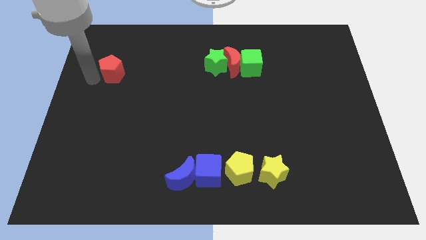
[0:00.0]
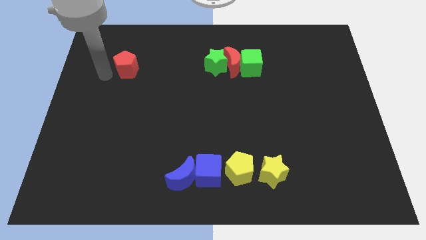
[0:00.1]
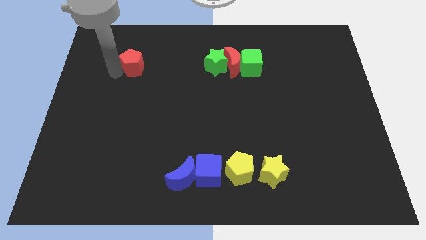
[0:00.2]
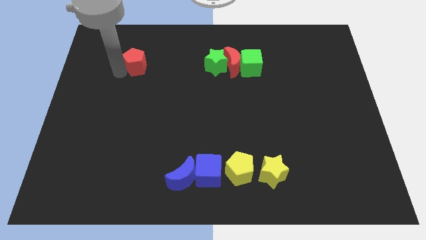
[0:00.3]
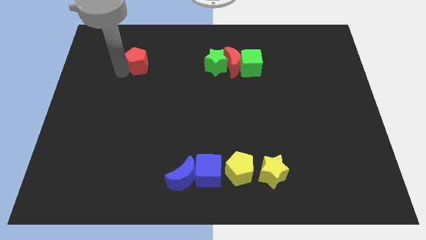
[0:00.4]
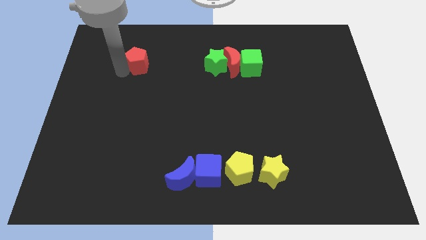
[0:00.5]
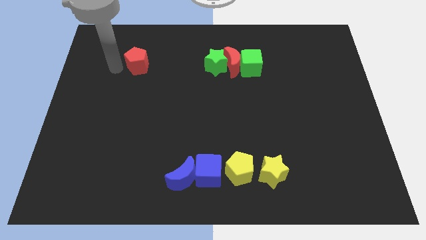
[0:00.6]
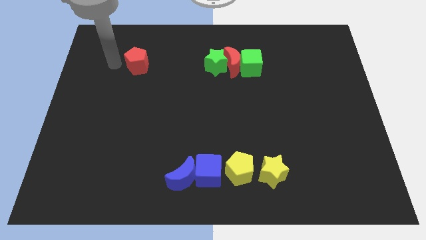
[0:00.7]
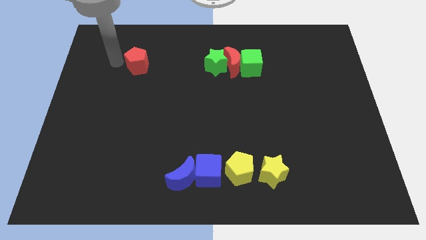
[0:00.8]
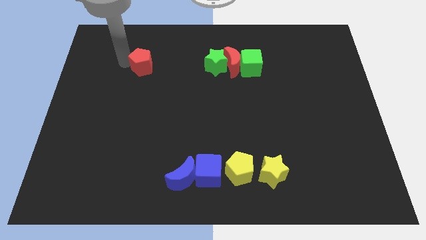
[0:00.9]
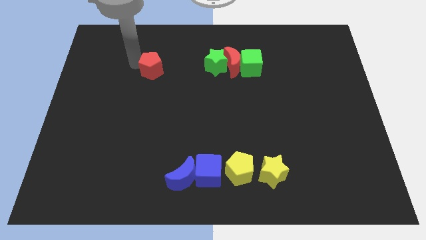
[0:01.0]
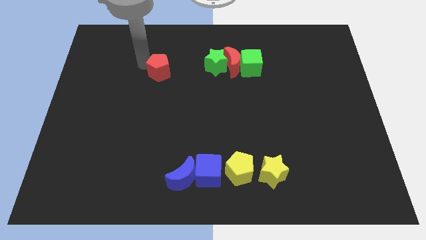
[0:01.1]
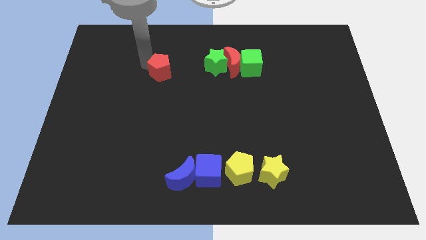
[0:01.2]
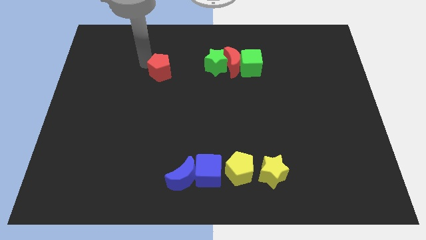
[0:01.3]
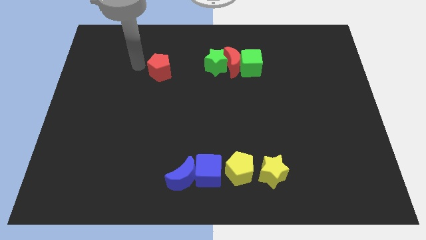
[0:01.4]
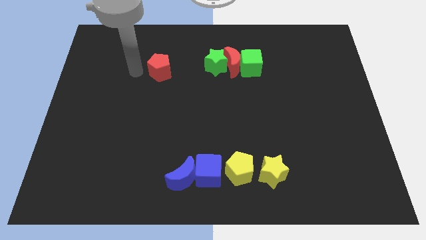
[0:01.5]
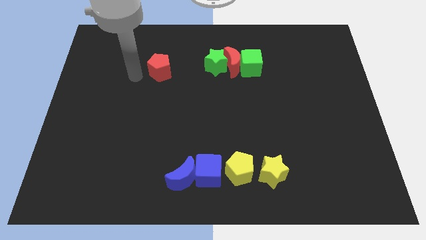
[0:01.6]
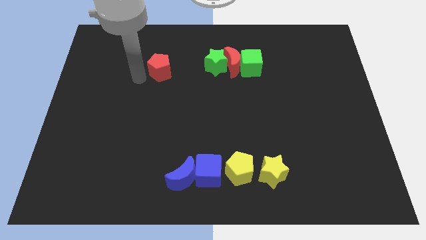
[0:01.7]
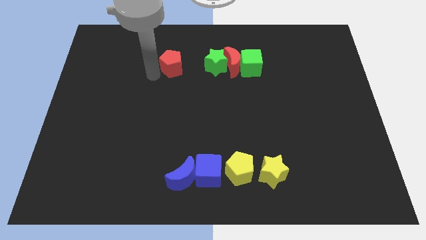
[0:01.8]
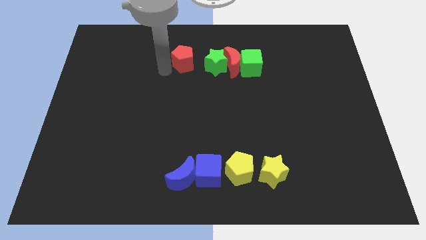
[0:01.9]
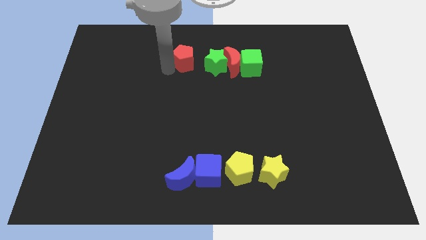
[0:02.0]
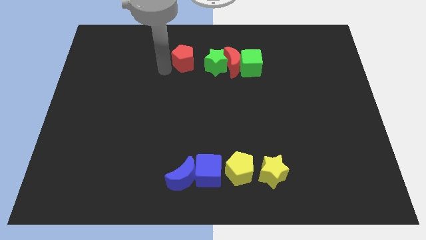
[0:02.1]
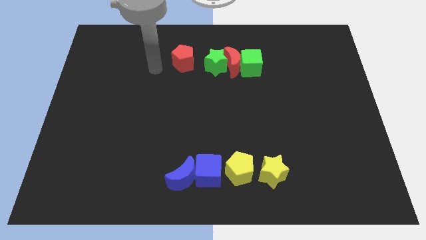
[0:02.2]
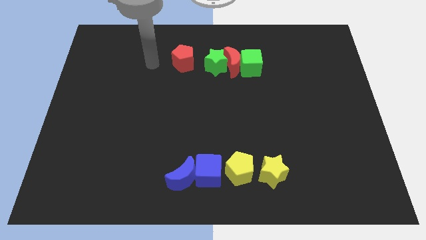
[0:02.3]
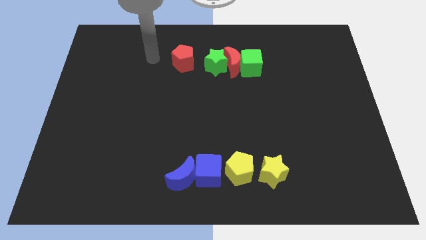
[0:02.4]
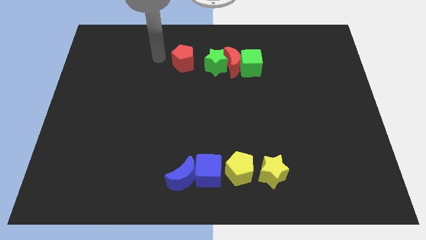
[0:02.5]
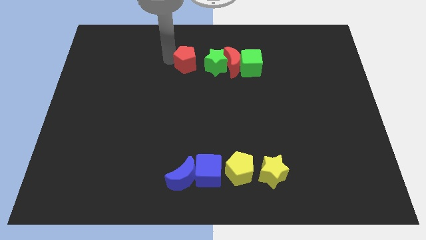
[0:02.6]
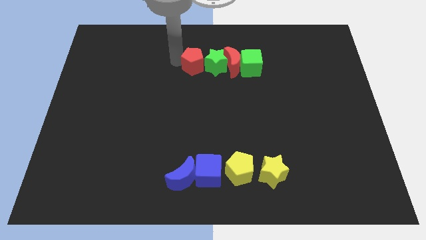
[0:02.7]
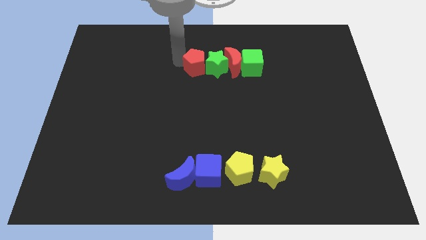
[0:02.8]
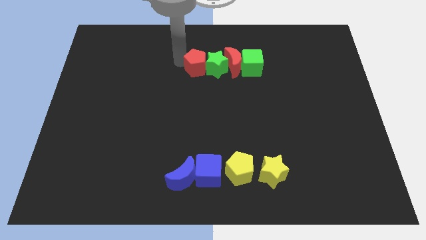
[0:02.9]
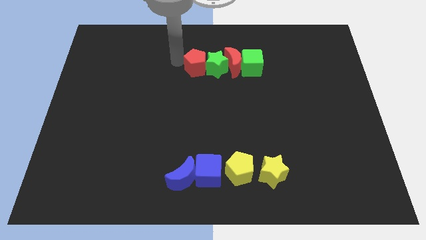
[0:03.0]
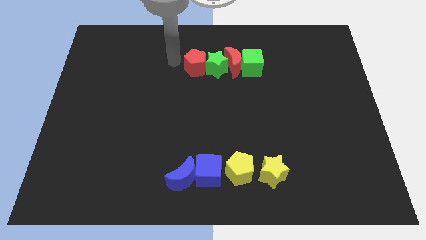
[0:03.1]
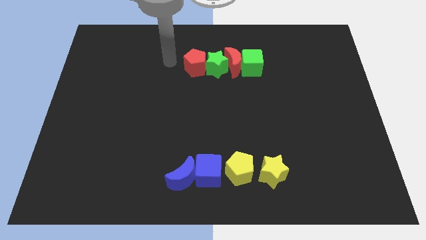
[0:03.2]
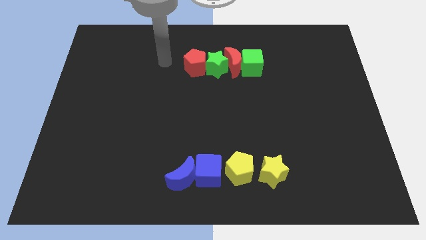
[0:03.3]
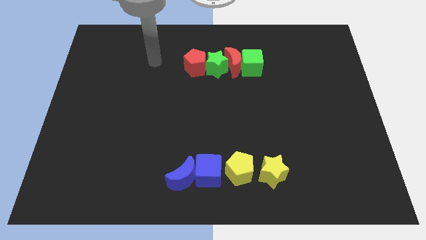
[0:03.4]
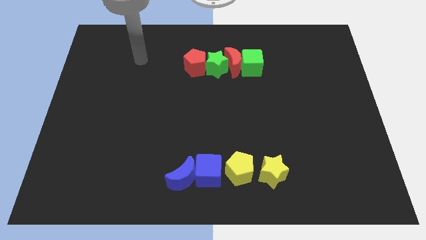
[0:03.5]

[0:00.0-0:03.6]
push the red pentagon into the left of the green star

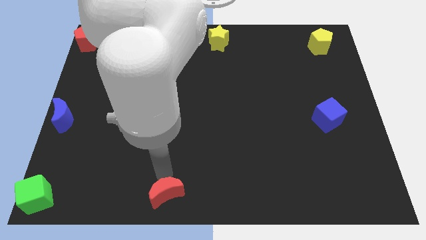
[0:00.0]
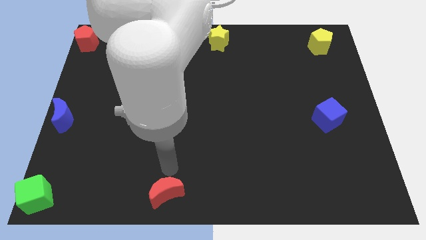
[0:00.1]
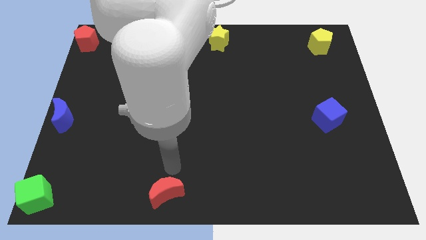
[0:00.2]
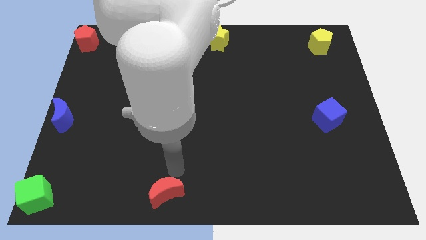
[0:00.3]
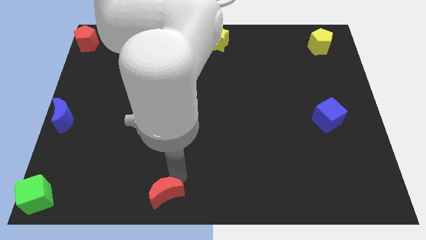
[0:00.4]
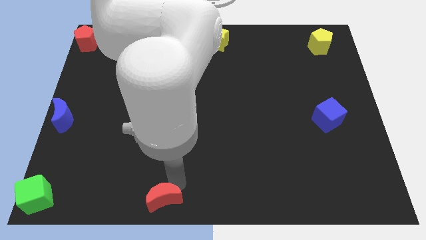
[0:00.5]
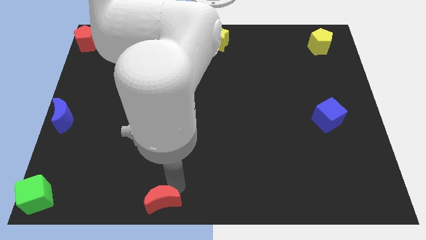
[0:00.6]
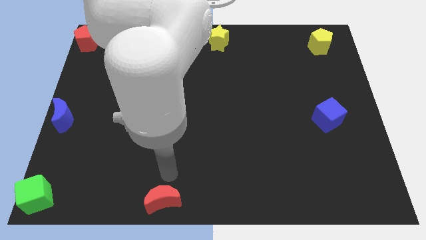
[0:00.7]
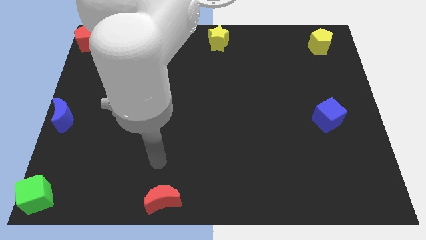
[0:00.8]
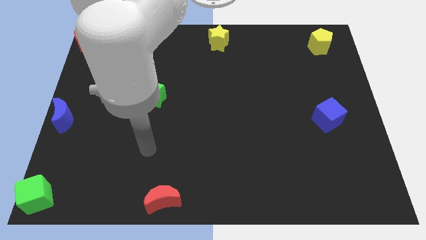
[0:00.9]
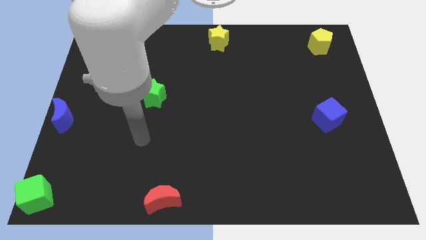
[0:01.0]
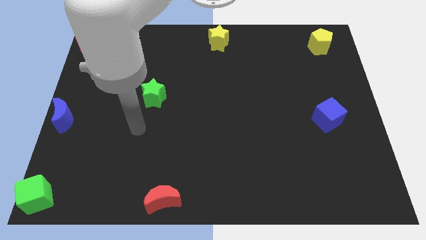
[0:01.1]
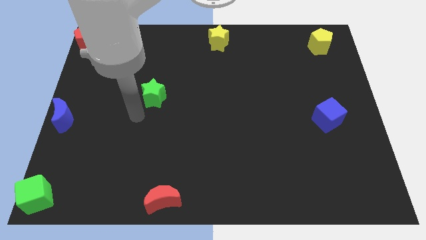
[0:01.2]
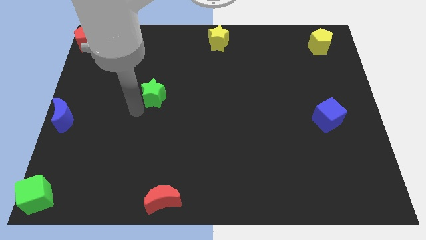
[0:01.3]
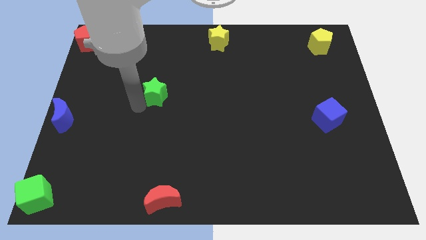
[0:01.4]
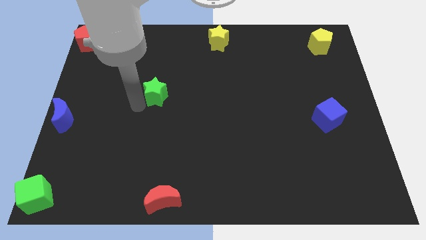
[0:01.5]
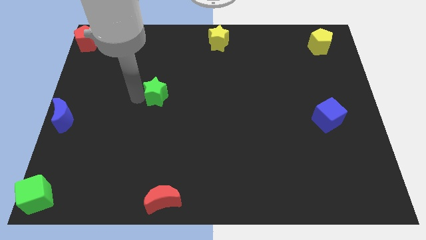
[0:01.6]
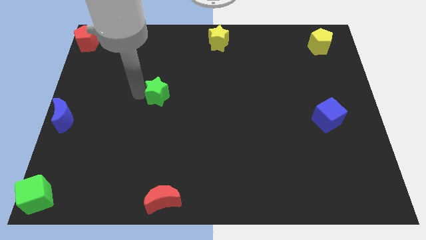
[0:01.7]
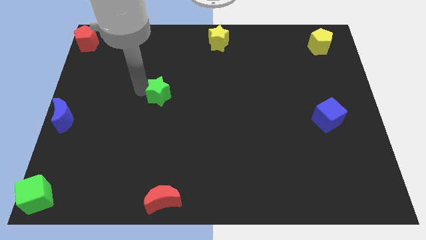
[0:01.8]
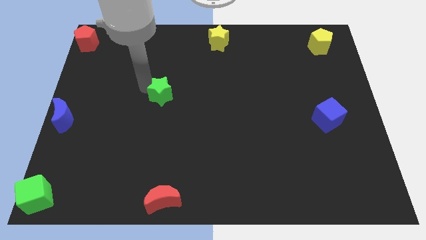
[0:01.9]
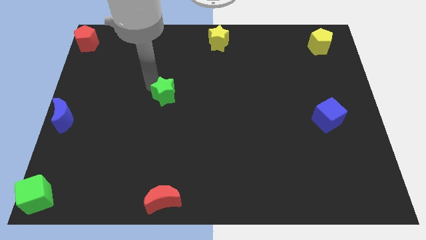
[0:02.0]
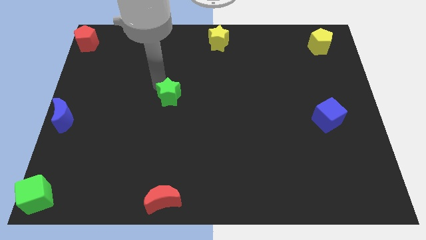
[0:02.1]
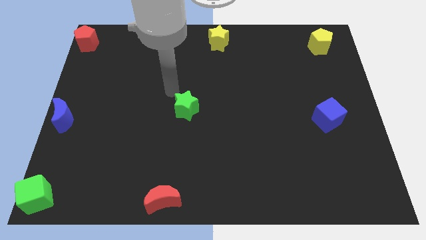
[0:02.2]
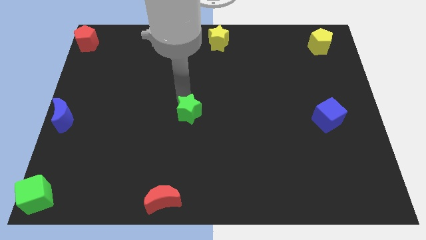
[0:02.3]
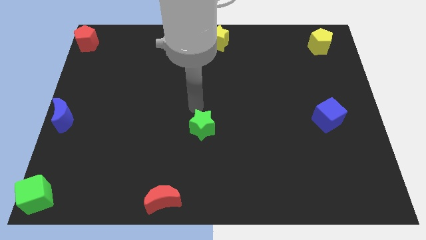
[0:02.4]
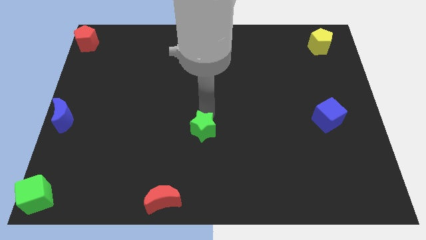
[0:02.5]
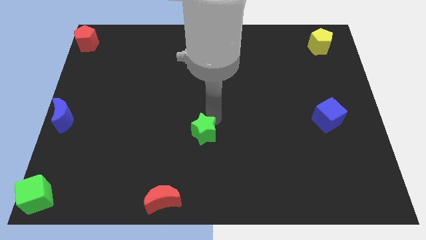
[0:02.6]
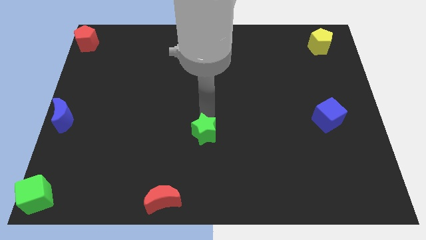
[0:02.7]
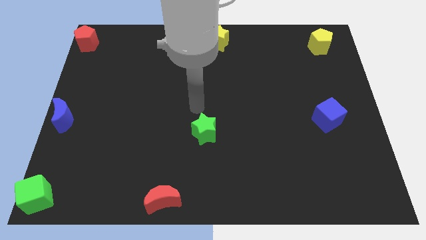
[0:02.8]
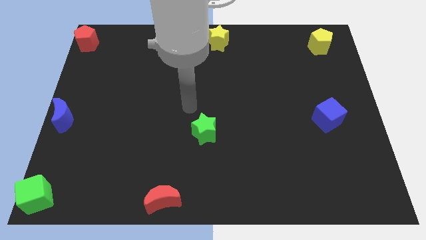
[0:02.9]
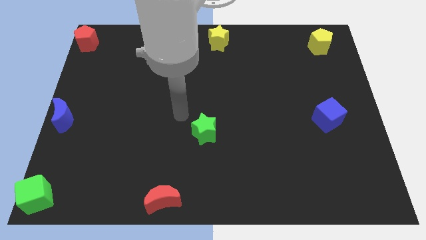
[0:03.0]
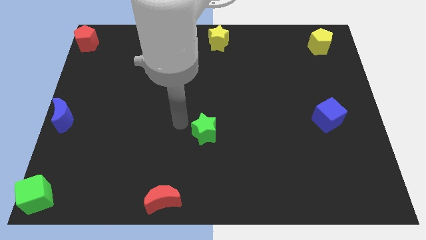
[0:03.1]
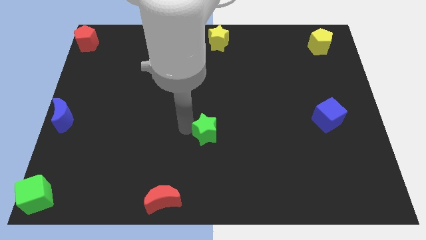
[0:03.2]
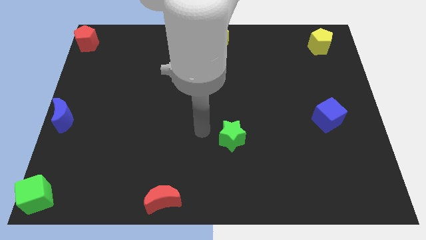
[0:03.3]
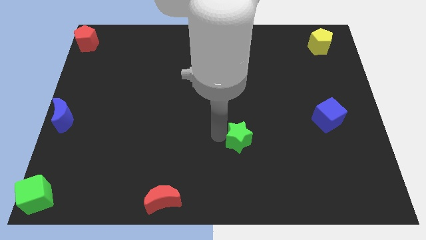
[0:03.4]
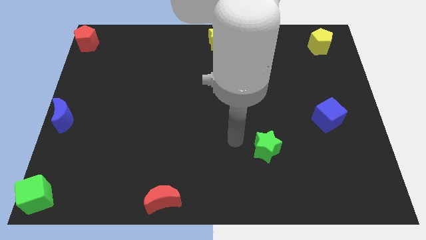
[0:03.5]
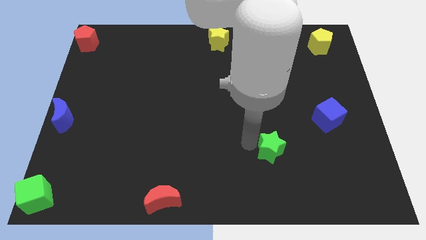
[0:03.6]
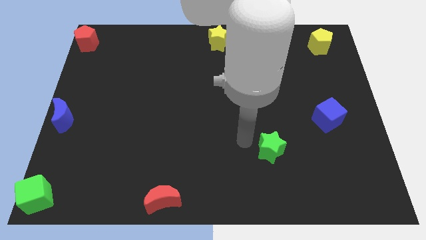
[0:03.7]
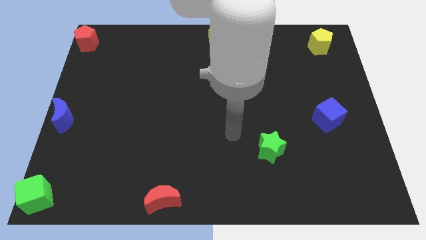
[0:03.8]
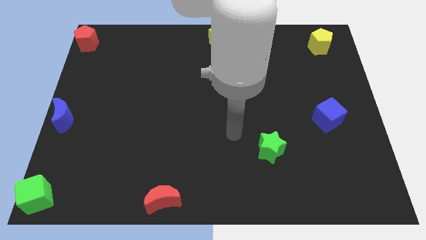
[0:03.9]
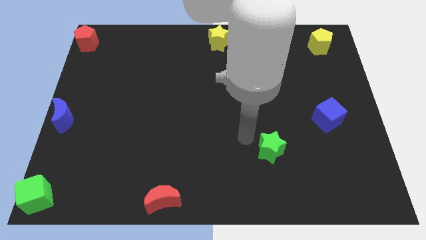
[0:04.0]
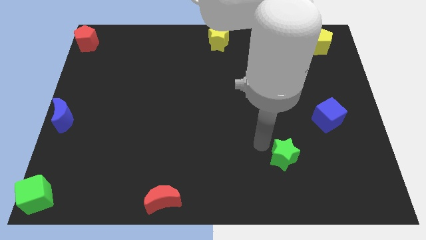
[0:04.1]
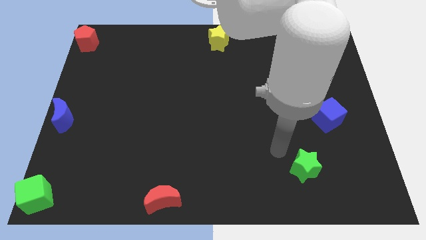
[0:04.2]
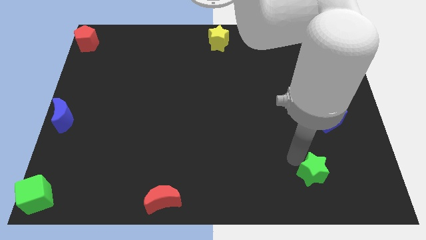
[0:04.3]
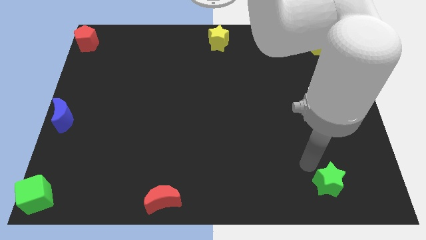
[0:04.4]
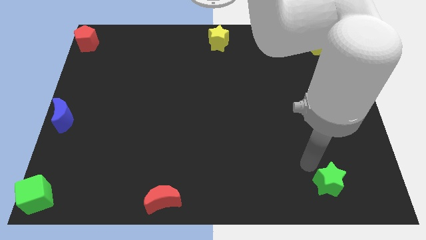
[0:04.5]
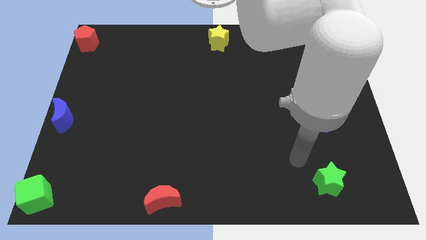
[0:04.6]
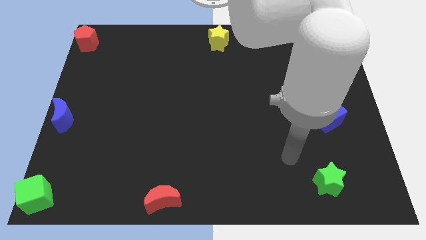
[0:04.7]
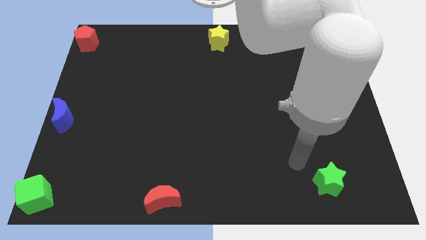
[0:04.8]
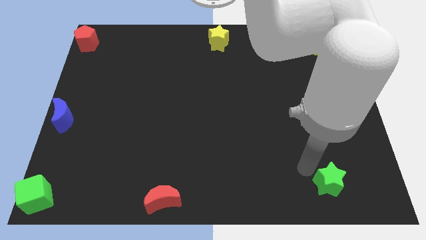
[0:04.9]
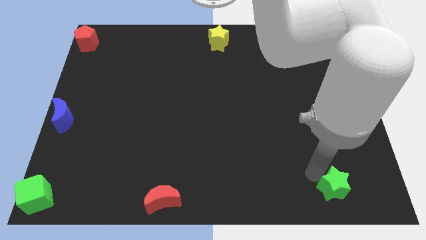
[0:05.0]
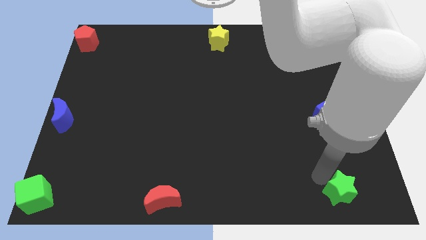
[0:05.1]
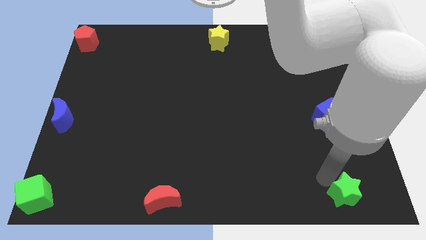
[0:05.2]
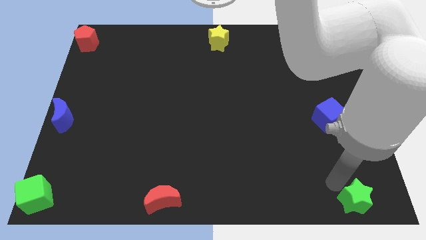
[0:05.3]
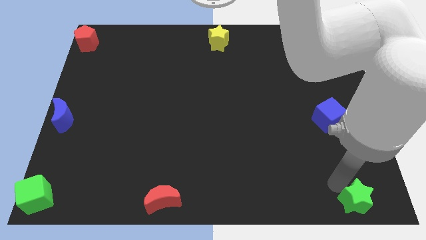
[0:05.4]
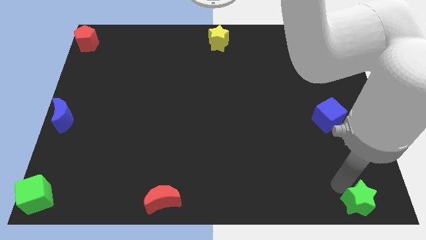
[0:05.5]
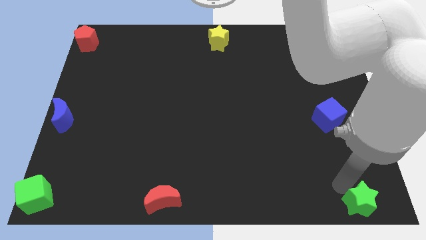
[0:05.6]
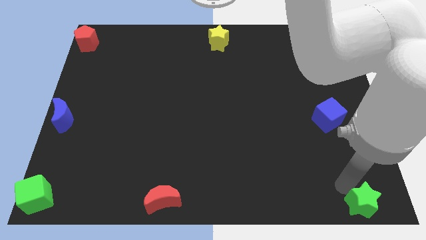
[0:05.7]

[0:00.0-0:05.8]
push the green star towards the bottom right corner
